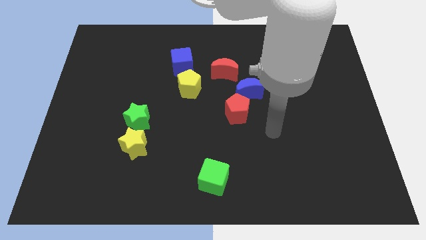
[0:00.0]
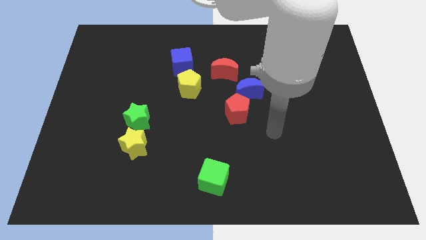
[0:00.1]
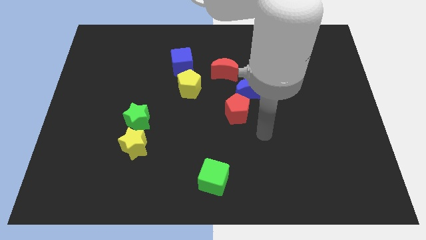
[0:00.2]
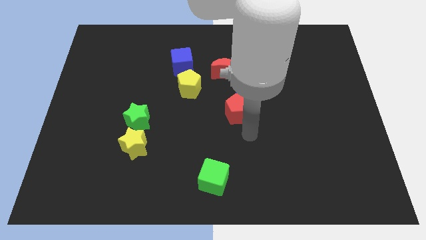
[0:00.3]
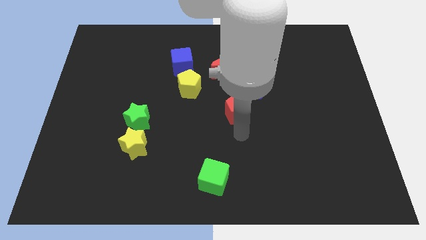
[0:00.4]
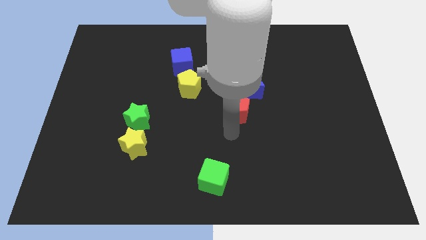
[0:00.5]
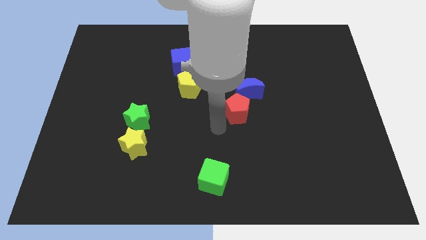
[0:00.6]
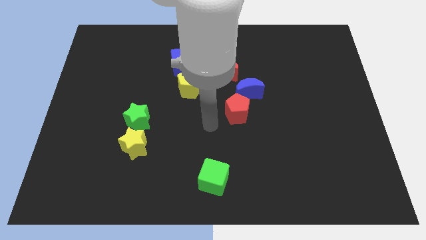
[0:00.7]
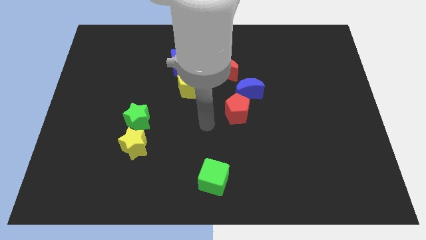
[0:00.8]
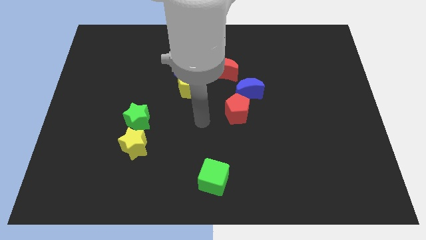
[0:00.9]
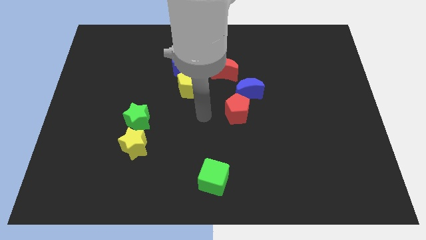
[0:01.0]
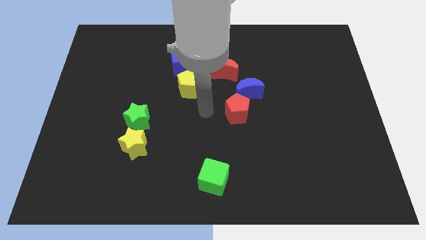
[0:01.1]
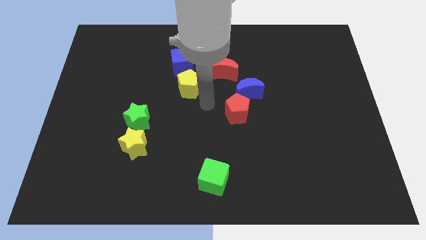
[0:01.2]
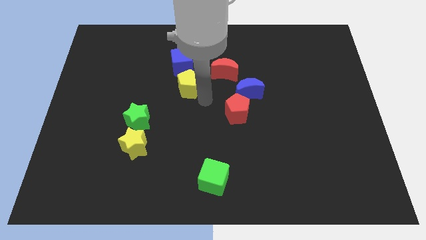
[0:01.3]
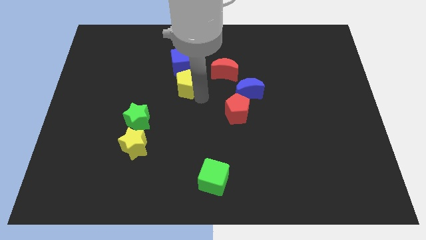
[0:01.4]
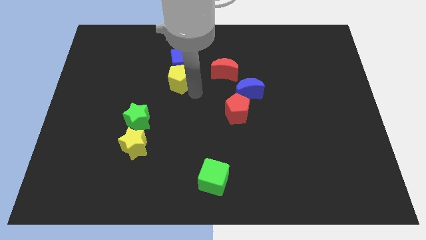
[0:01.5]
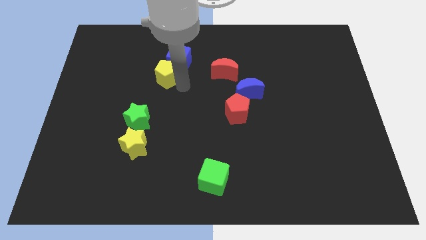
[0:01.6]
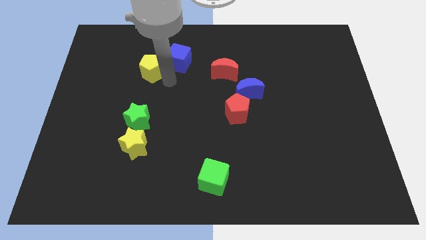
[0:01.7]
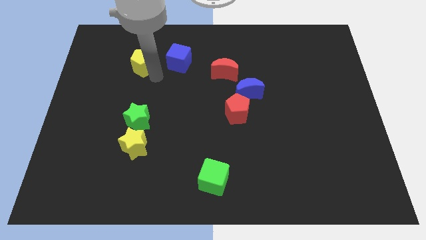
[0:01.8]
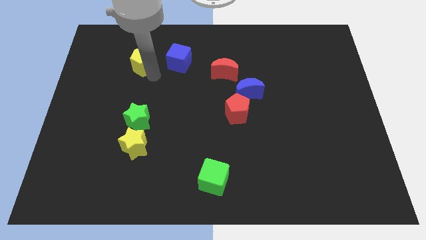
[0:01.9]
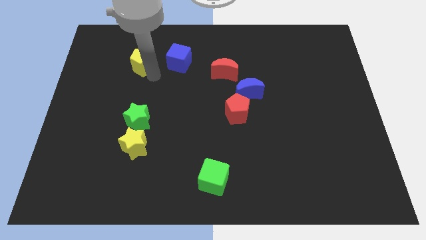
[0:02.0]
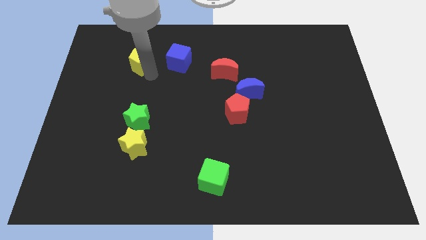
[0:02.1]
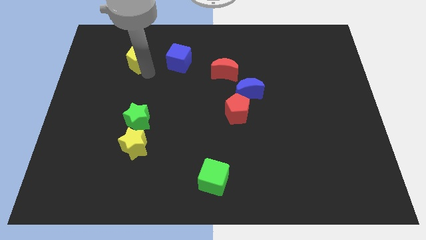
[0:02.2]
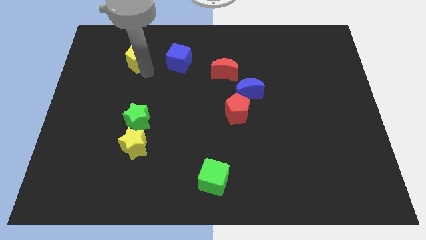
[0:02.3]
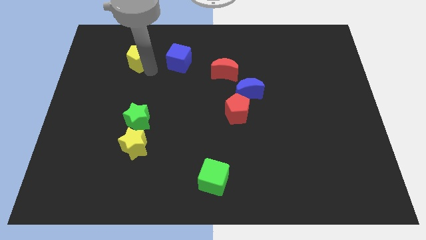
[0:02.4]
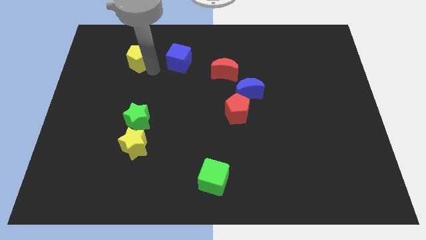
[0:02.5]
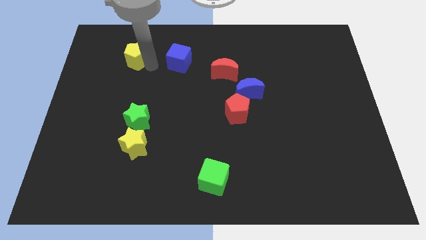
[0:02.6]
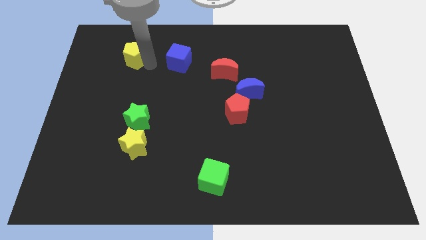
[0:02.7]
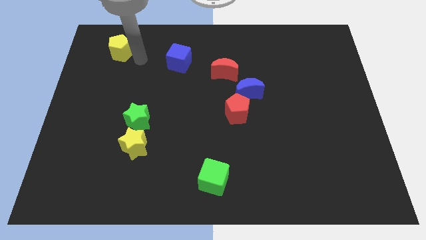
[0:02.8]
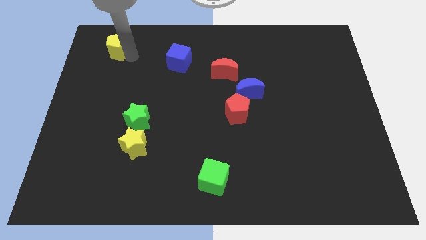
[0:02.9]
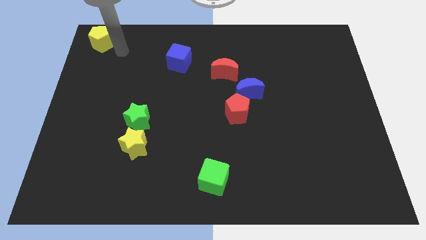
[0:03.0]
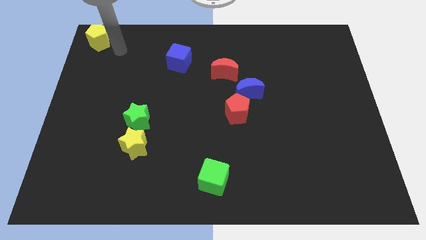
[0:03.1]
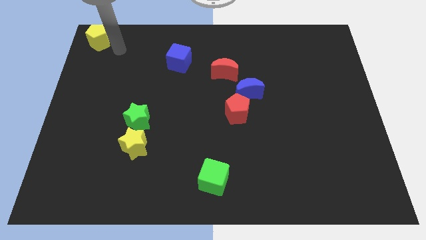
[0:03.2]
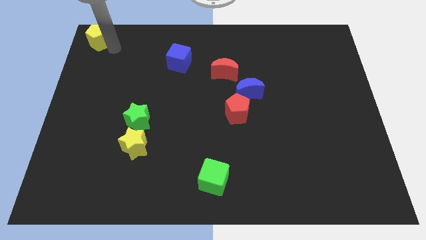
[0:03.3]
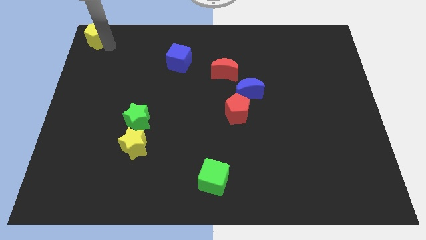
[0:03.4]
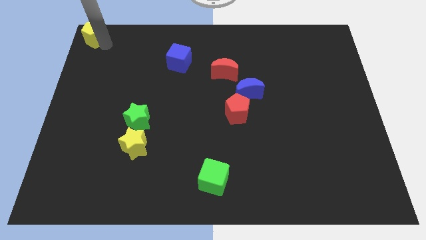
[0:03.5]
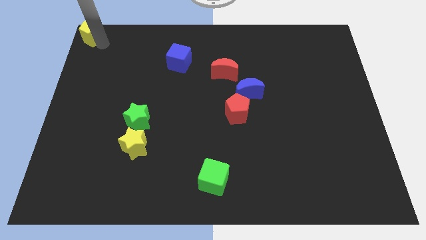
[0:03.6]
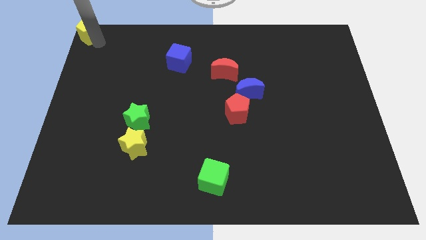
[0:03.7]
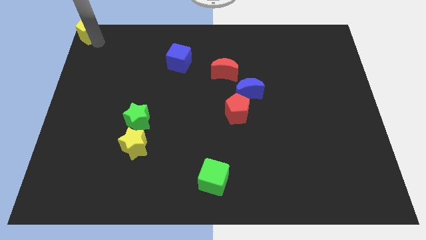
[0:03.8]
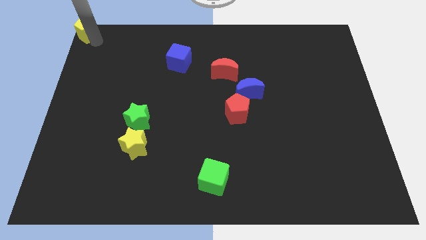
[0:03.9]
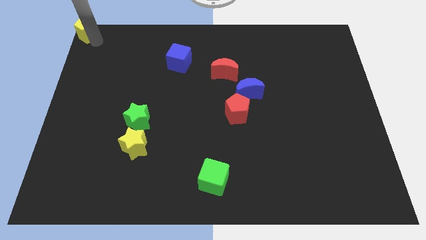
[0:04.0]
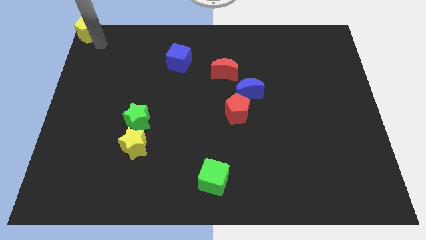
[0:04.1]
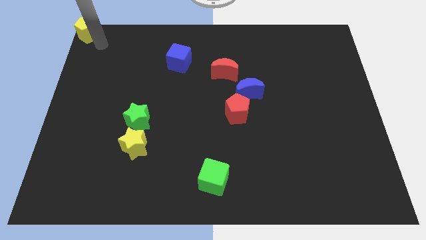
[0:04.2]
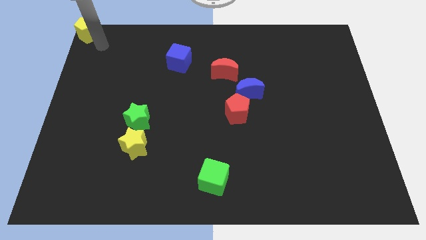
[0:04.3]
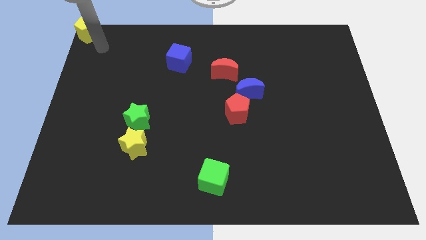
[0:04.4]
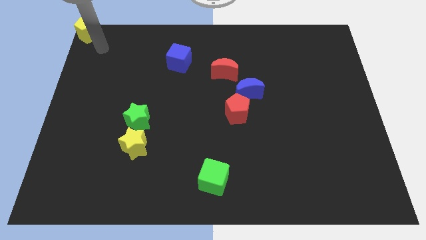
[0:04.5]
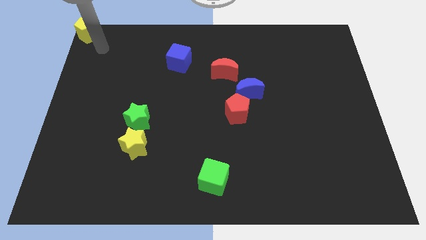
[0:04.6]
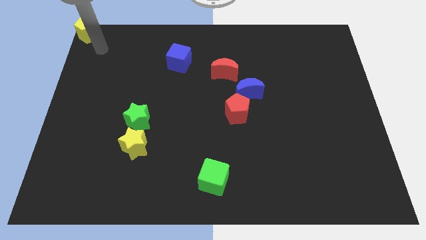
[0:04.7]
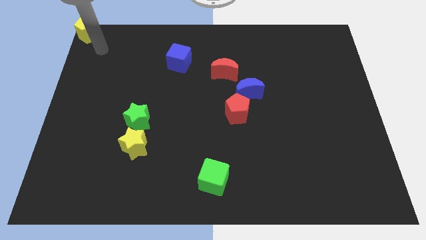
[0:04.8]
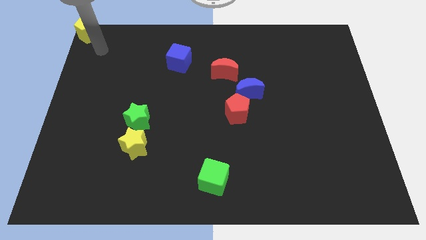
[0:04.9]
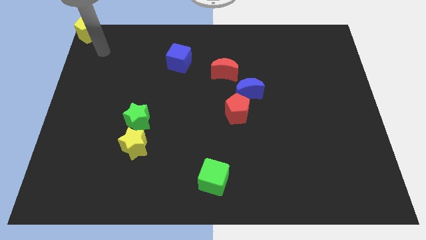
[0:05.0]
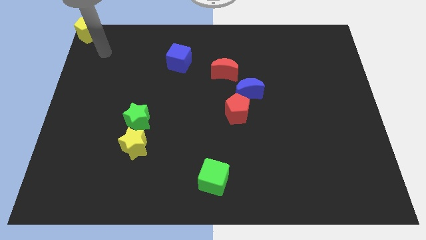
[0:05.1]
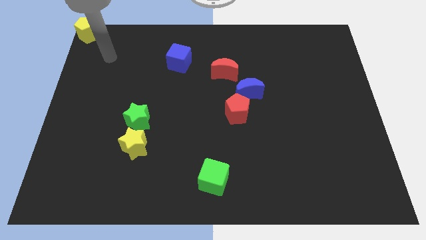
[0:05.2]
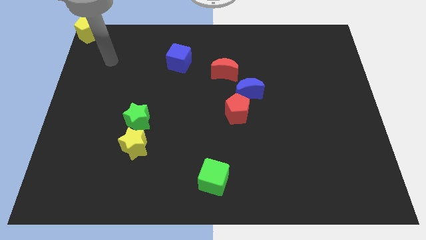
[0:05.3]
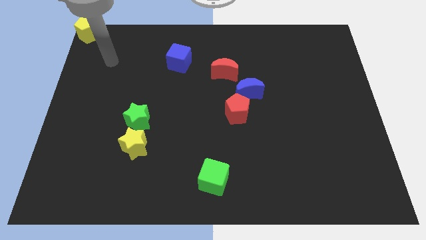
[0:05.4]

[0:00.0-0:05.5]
push the yellow pentagon to the top left corner of the board

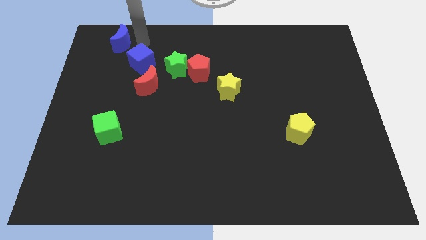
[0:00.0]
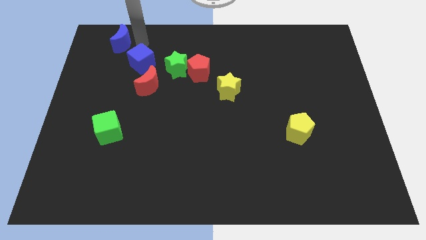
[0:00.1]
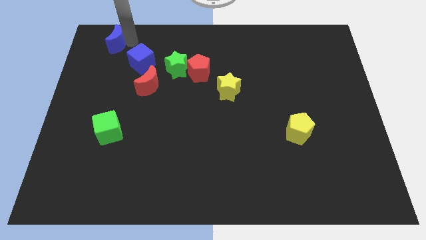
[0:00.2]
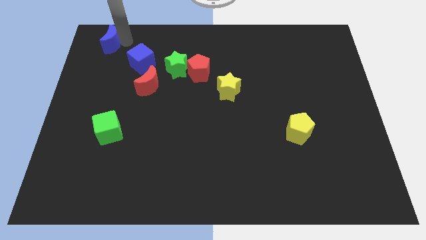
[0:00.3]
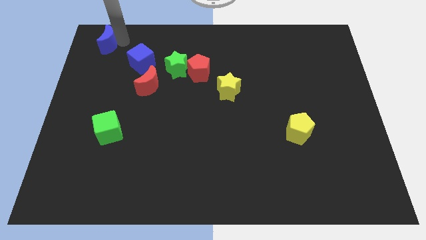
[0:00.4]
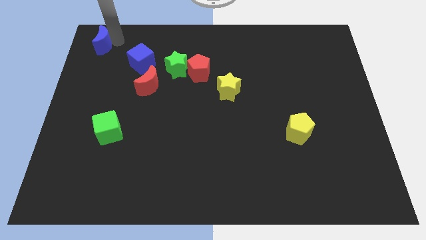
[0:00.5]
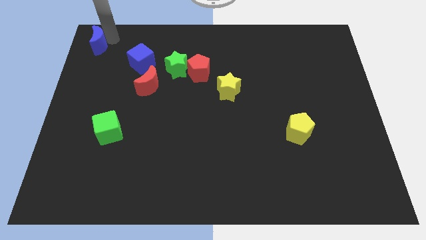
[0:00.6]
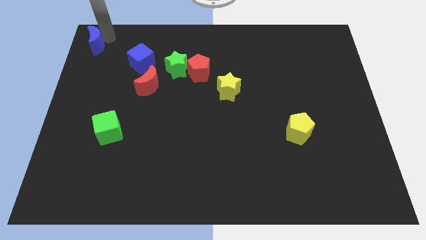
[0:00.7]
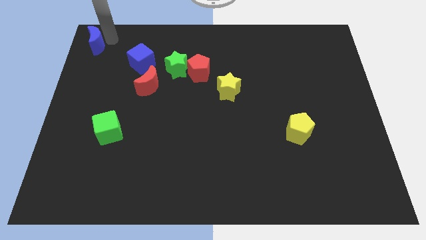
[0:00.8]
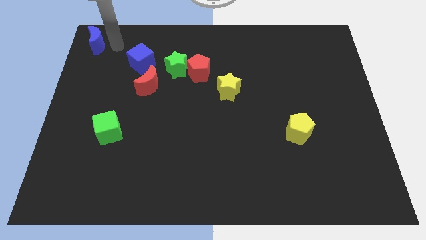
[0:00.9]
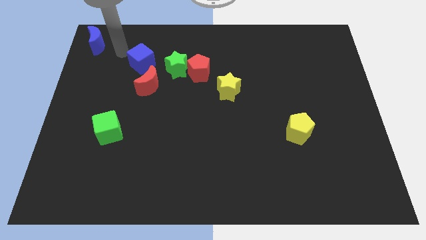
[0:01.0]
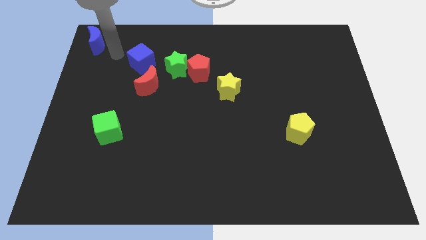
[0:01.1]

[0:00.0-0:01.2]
push the blue moon to the top left

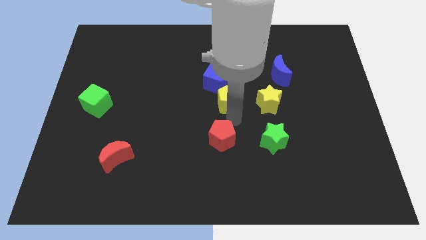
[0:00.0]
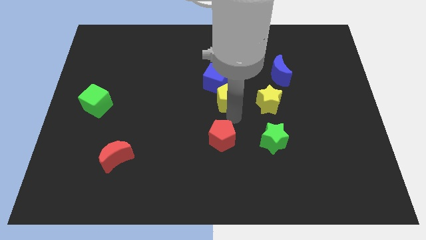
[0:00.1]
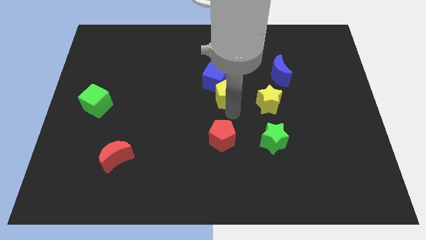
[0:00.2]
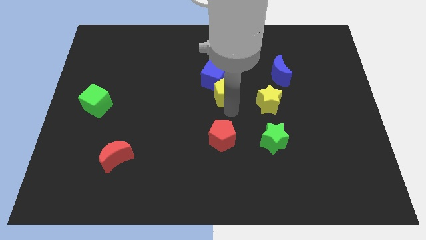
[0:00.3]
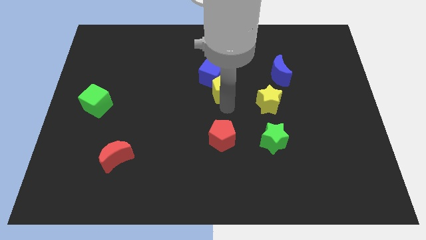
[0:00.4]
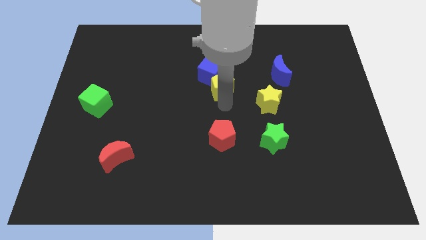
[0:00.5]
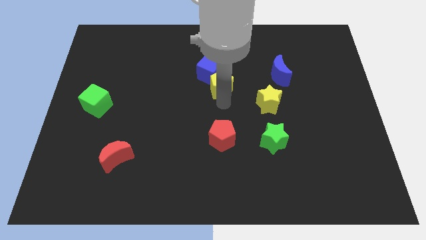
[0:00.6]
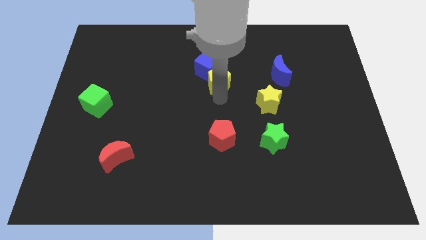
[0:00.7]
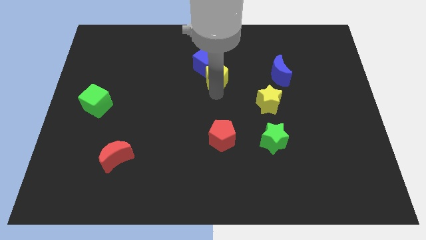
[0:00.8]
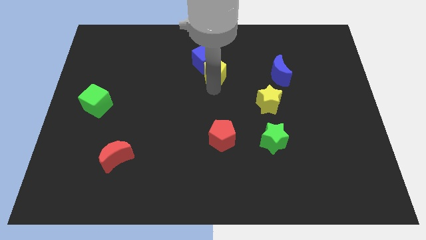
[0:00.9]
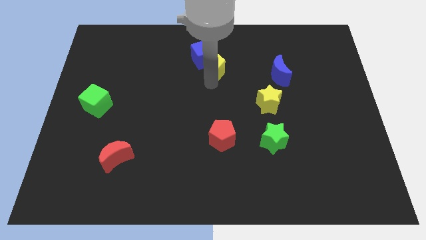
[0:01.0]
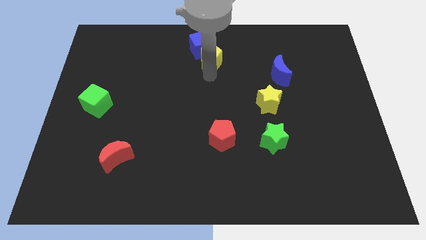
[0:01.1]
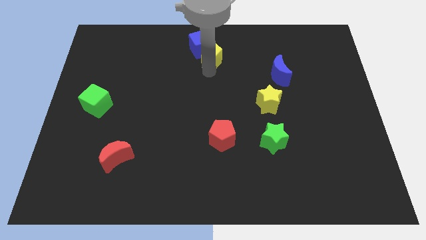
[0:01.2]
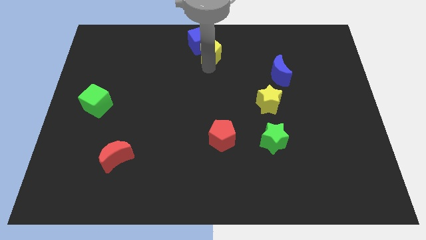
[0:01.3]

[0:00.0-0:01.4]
move the yellow pentagon and blue cube slightly upwards

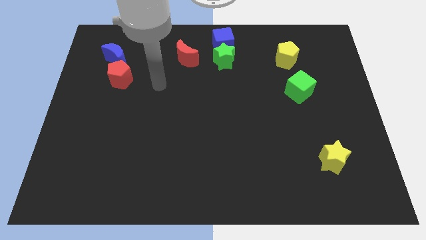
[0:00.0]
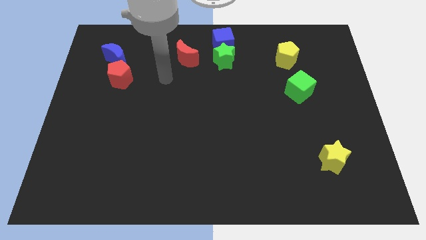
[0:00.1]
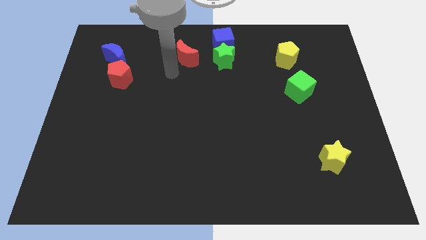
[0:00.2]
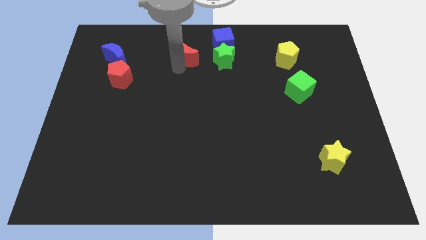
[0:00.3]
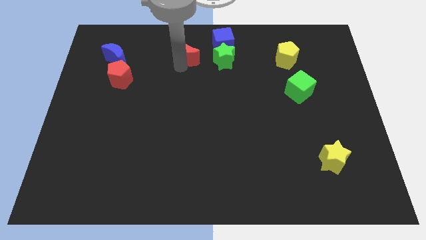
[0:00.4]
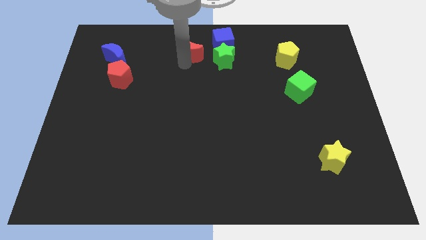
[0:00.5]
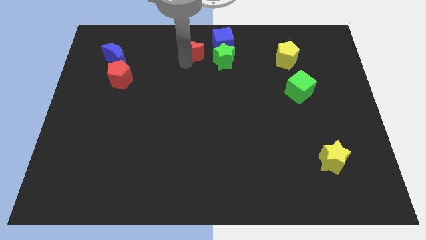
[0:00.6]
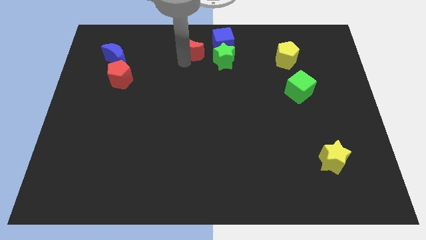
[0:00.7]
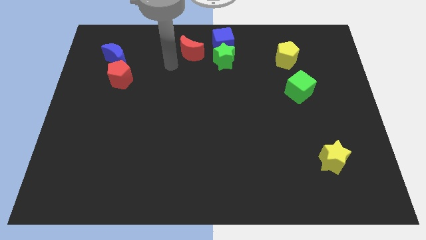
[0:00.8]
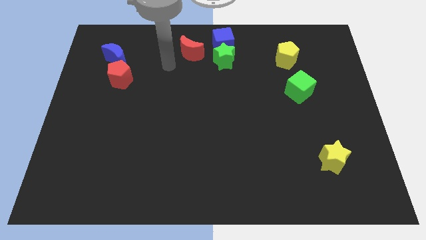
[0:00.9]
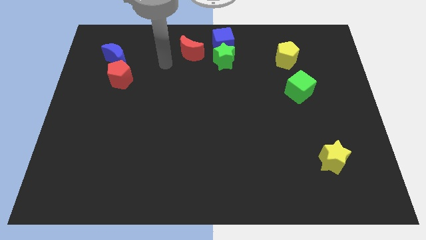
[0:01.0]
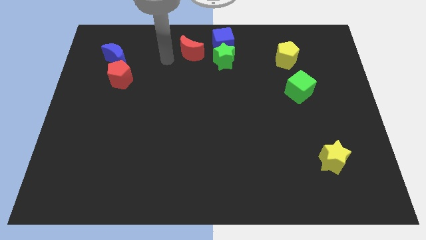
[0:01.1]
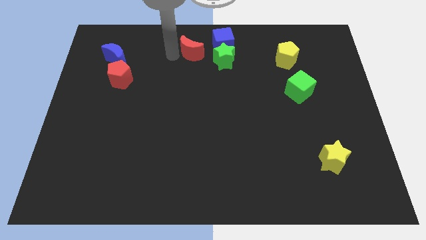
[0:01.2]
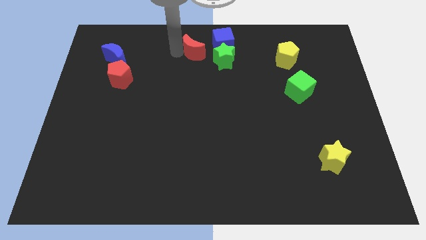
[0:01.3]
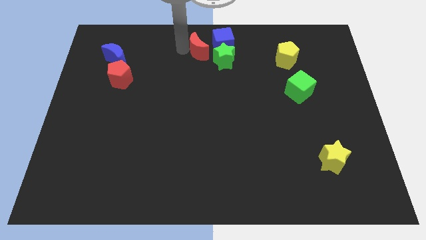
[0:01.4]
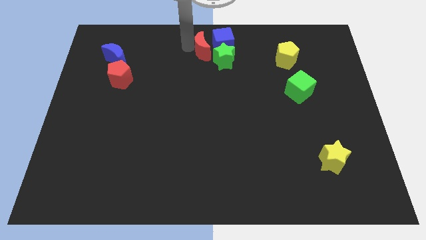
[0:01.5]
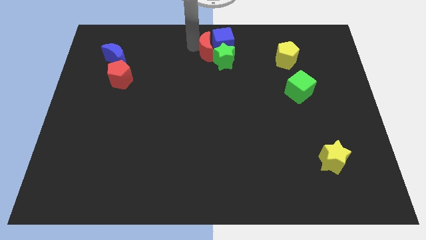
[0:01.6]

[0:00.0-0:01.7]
place the red moon to the left side of blue cube
